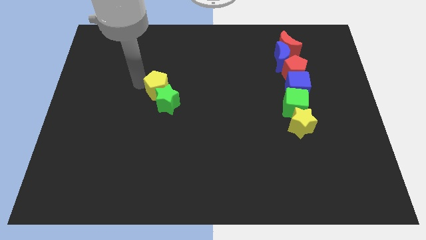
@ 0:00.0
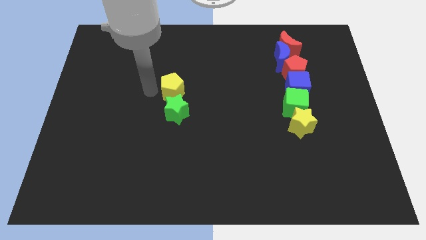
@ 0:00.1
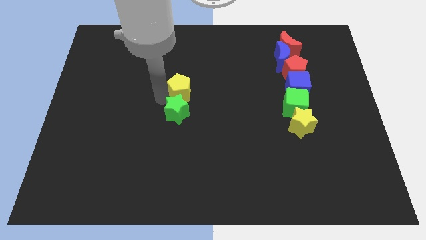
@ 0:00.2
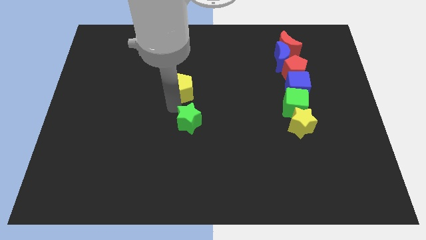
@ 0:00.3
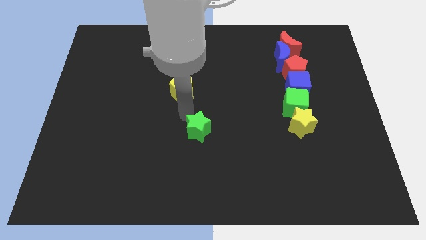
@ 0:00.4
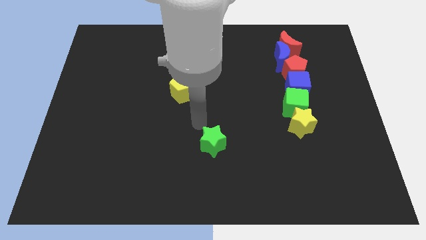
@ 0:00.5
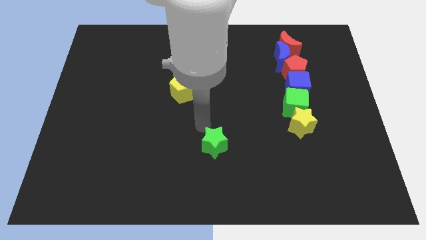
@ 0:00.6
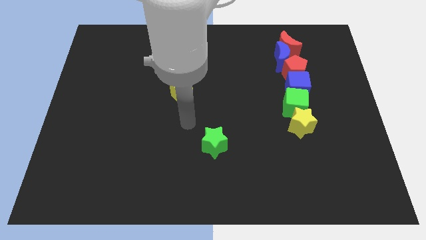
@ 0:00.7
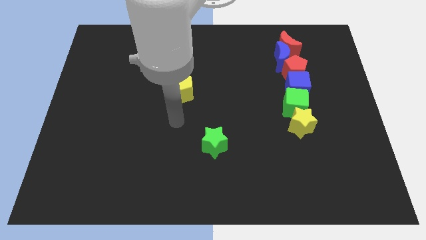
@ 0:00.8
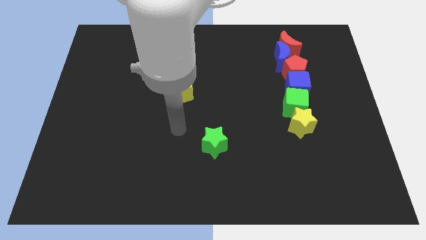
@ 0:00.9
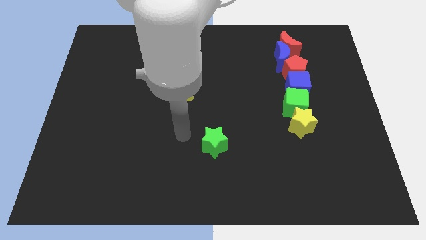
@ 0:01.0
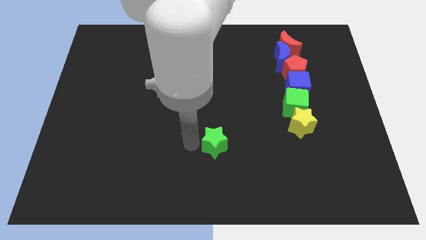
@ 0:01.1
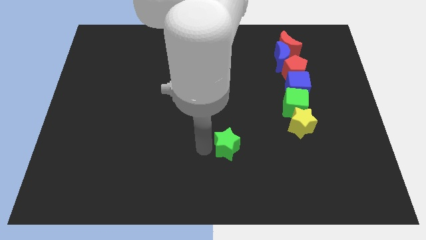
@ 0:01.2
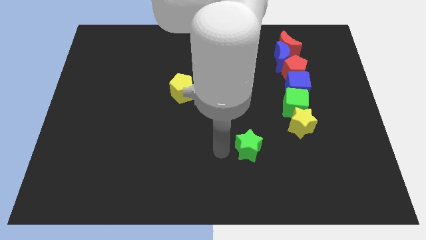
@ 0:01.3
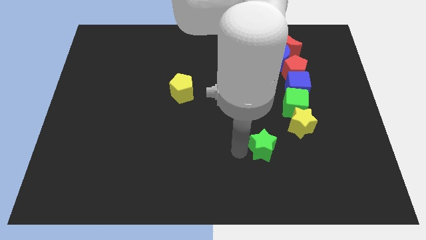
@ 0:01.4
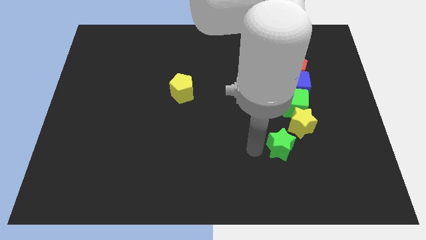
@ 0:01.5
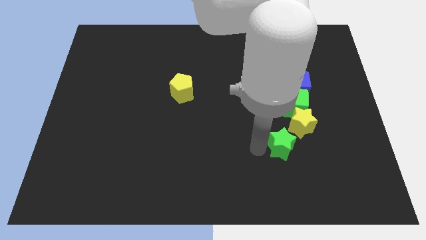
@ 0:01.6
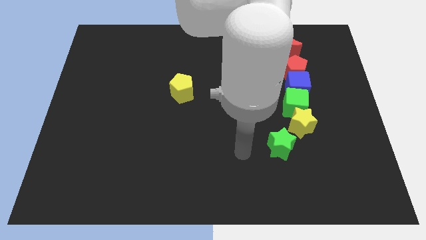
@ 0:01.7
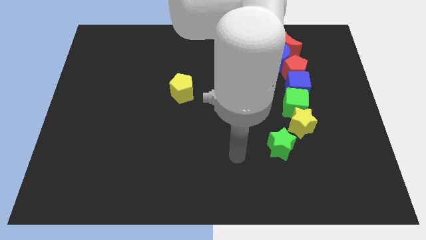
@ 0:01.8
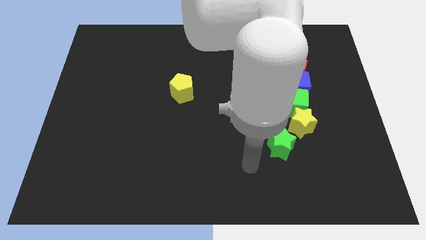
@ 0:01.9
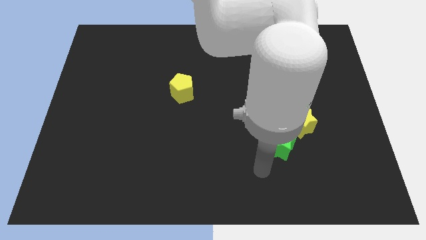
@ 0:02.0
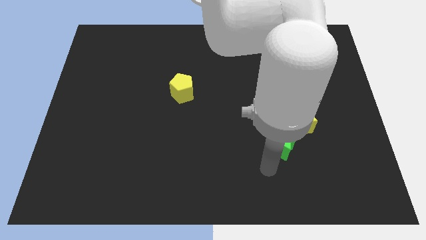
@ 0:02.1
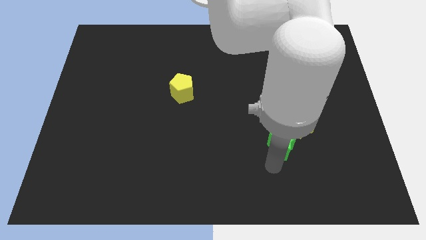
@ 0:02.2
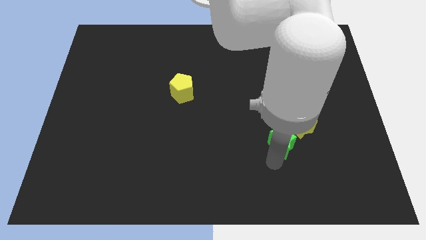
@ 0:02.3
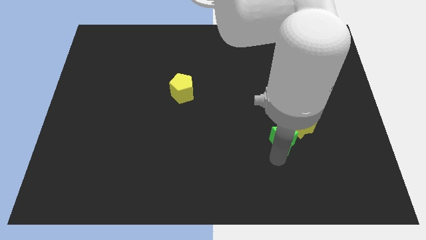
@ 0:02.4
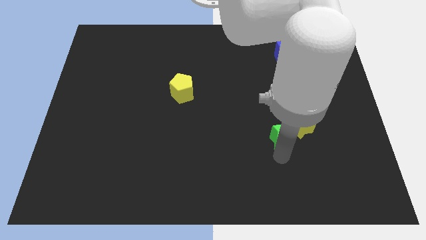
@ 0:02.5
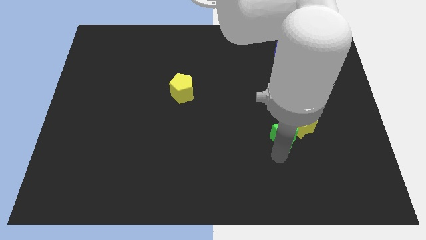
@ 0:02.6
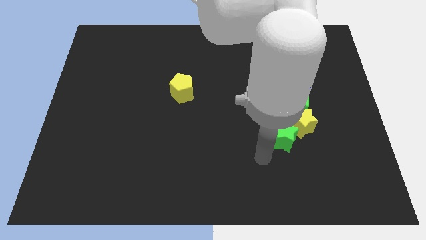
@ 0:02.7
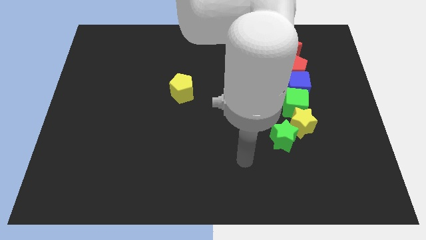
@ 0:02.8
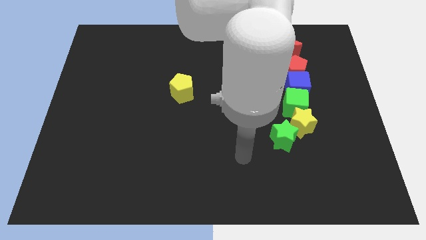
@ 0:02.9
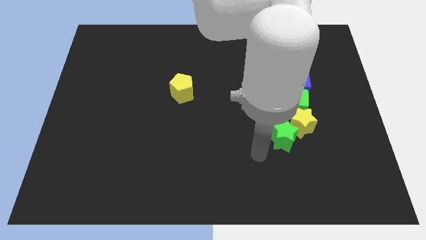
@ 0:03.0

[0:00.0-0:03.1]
move the green star diagonal to the yellow star

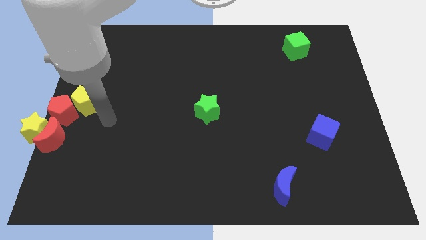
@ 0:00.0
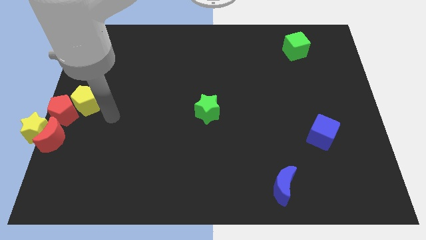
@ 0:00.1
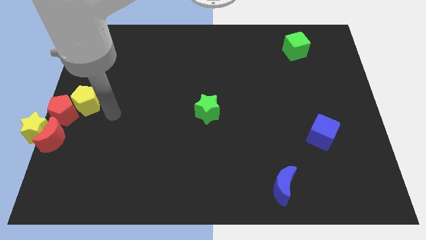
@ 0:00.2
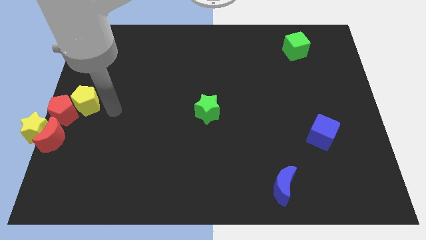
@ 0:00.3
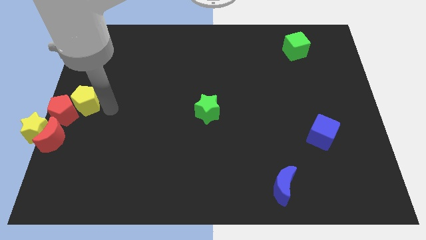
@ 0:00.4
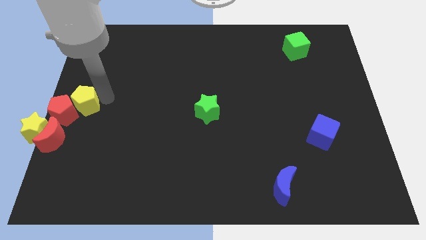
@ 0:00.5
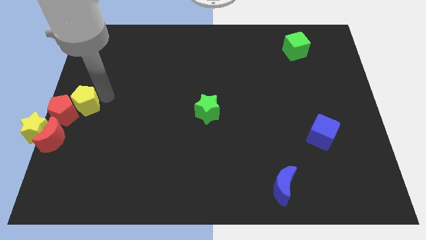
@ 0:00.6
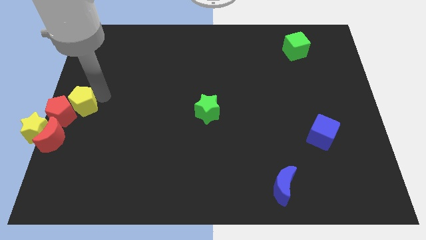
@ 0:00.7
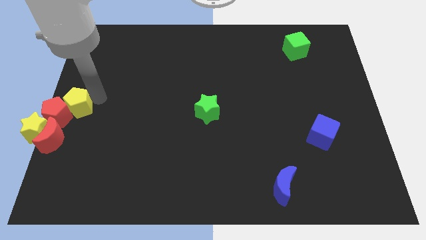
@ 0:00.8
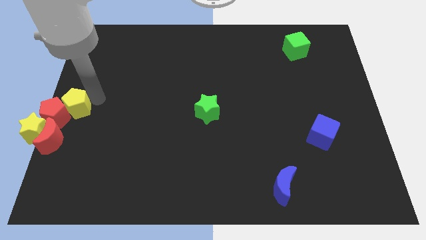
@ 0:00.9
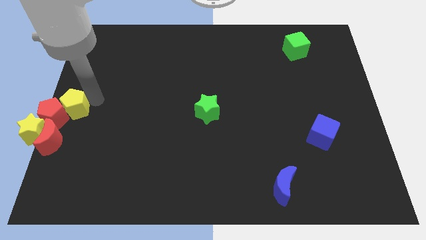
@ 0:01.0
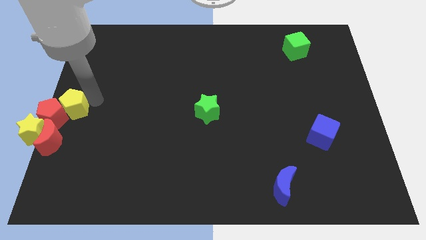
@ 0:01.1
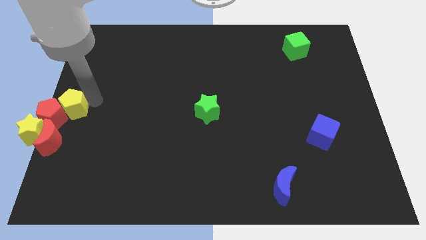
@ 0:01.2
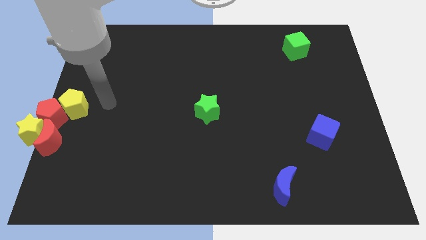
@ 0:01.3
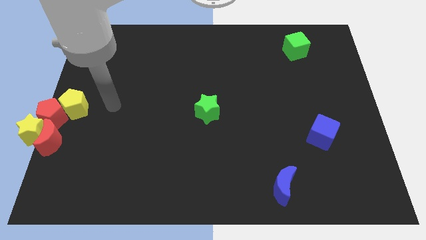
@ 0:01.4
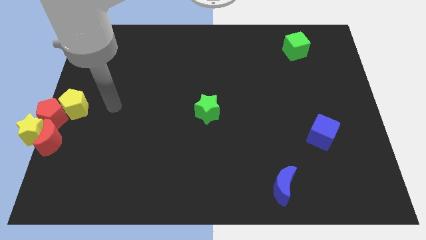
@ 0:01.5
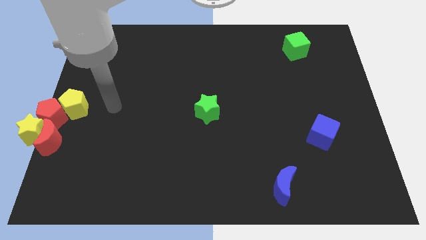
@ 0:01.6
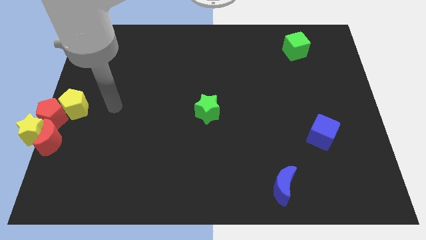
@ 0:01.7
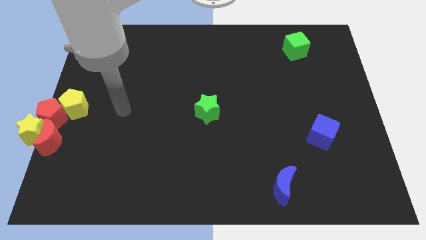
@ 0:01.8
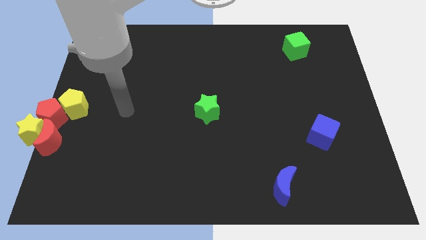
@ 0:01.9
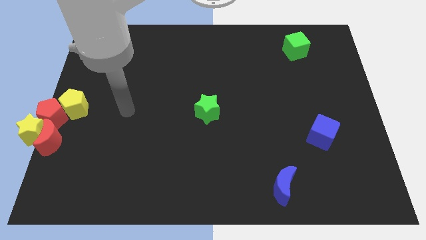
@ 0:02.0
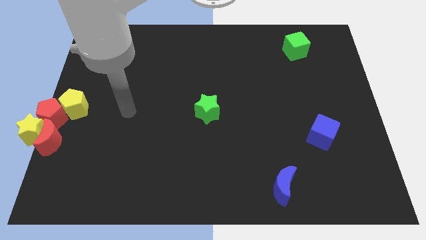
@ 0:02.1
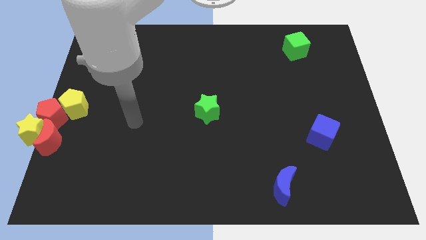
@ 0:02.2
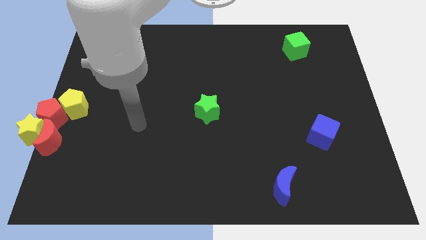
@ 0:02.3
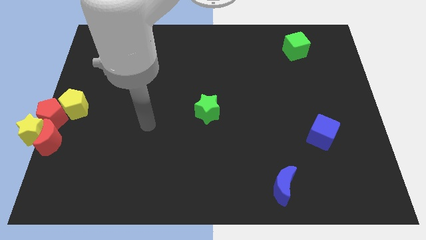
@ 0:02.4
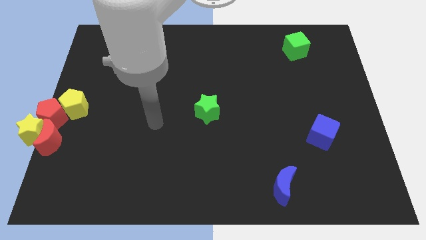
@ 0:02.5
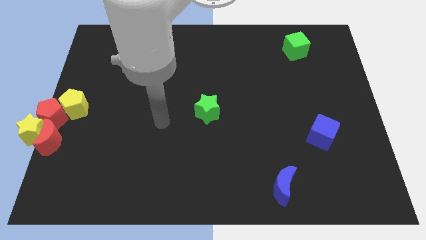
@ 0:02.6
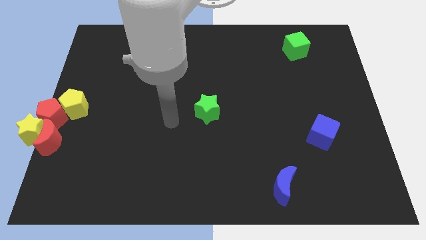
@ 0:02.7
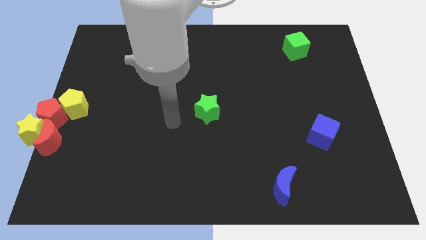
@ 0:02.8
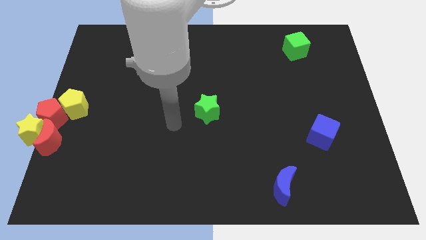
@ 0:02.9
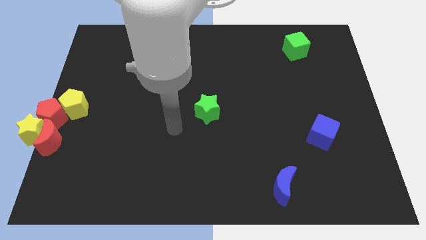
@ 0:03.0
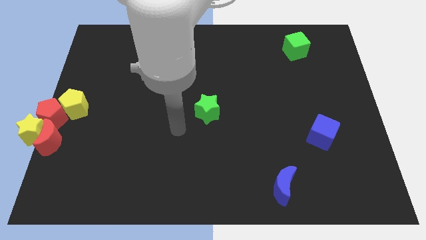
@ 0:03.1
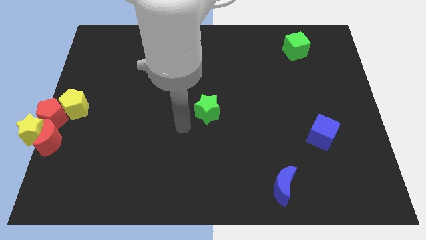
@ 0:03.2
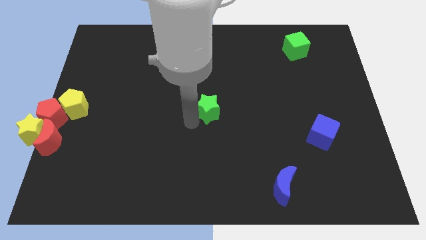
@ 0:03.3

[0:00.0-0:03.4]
push the yellow pentagon into the group of blocks

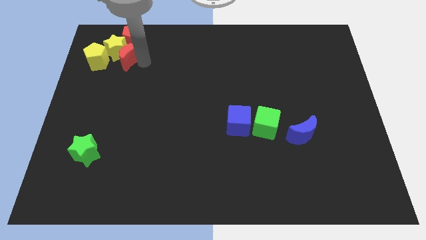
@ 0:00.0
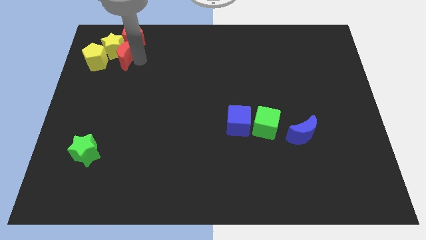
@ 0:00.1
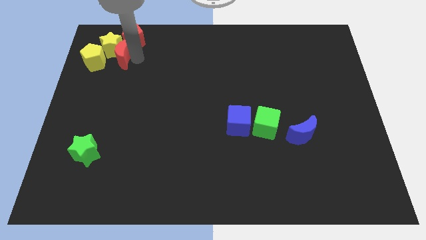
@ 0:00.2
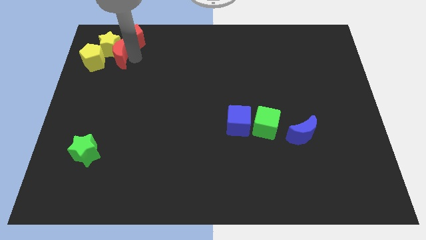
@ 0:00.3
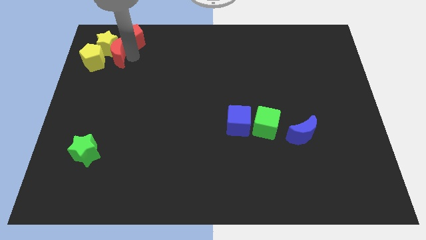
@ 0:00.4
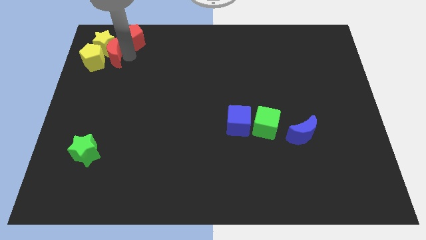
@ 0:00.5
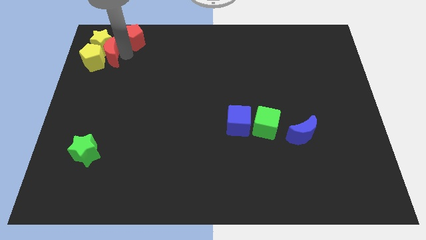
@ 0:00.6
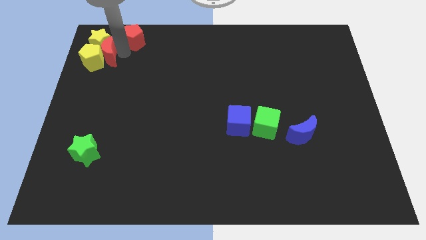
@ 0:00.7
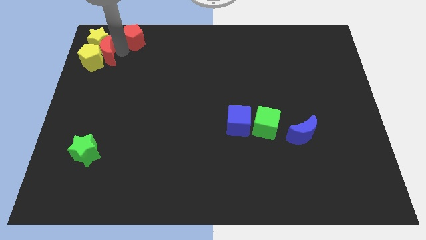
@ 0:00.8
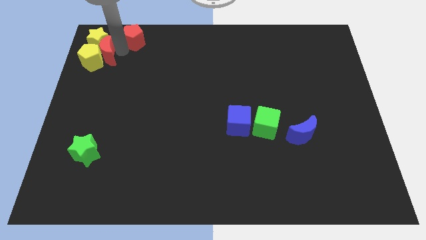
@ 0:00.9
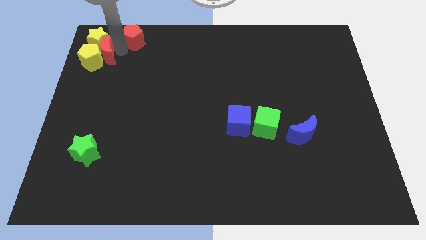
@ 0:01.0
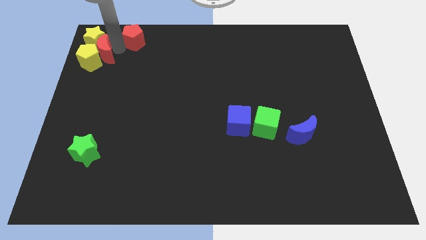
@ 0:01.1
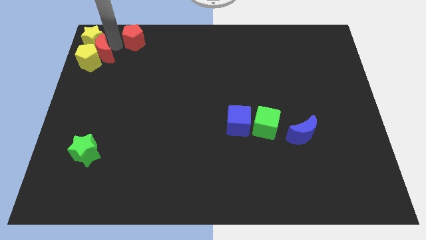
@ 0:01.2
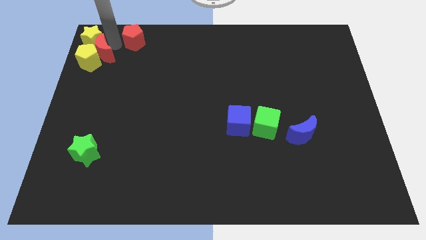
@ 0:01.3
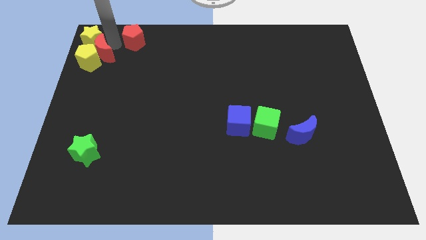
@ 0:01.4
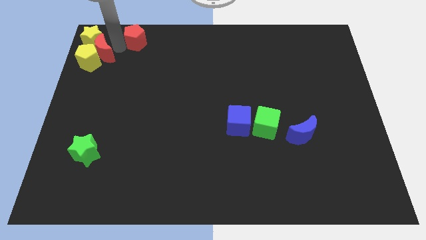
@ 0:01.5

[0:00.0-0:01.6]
separate the group of blocks from the red pentagon

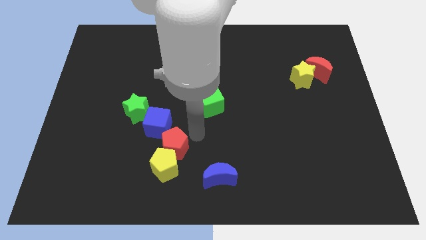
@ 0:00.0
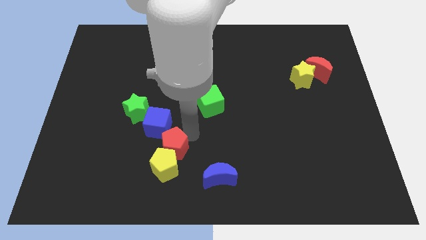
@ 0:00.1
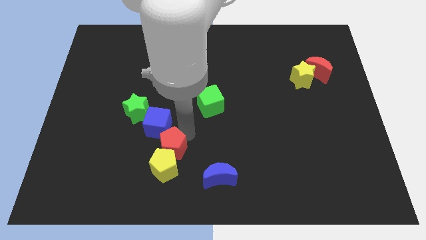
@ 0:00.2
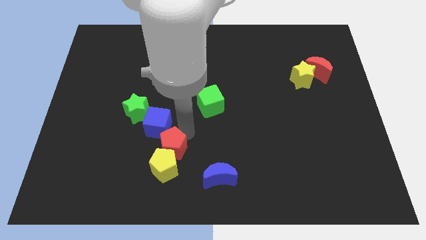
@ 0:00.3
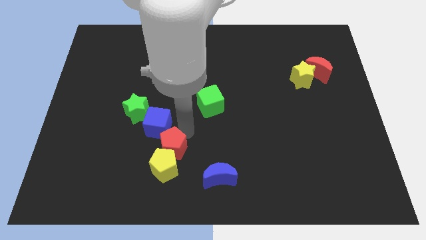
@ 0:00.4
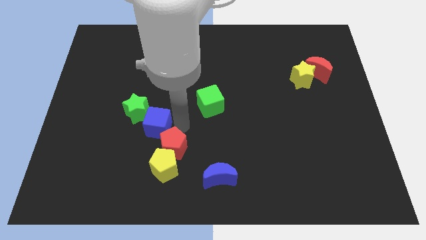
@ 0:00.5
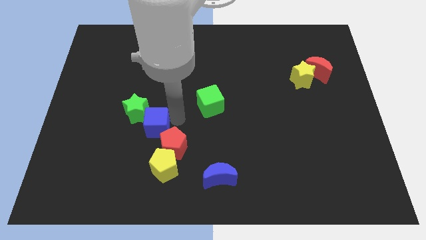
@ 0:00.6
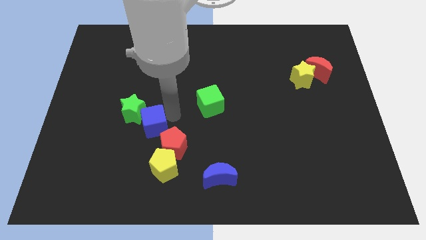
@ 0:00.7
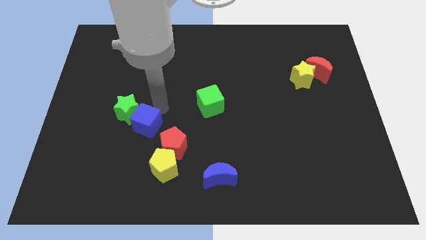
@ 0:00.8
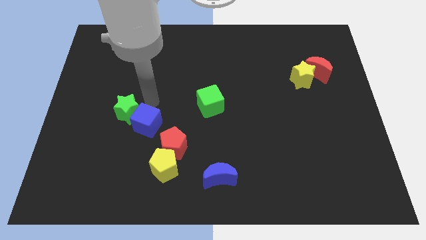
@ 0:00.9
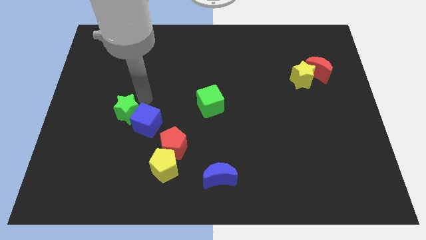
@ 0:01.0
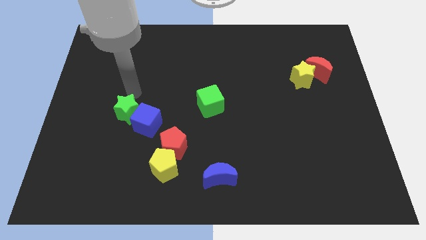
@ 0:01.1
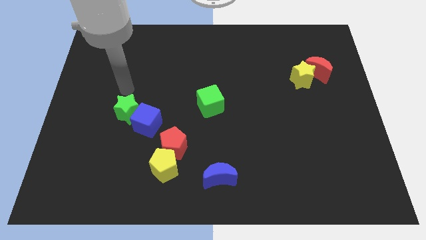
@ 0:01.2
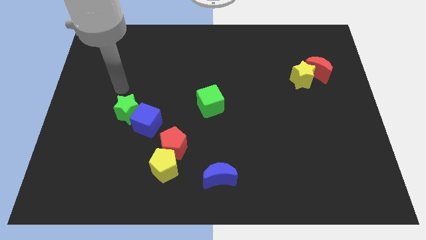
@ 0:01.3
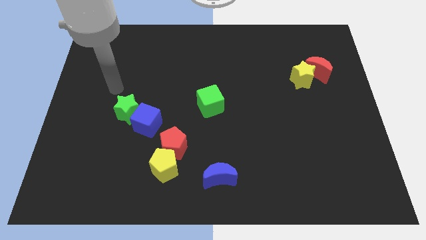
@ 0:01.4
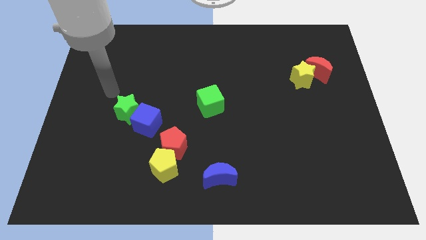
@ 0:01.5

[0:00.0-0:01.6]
move the blue cube slightly
